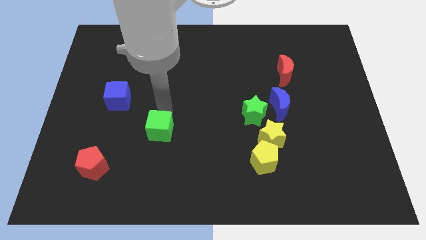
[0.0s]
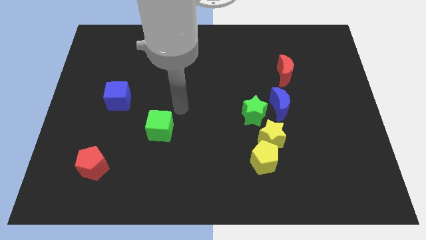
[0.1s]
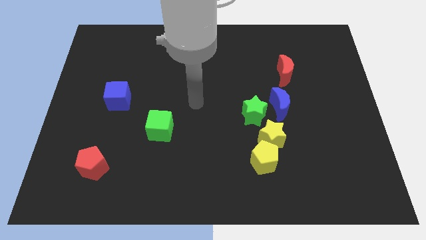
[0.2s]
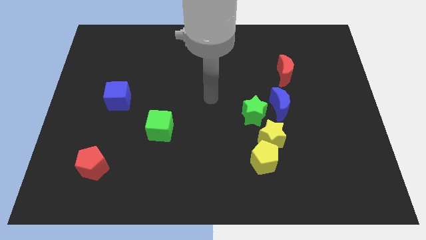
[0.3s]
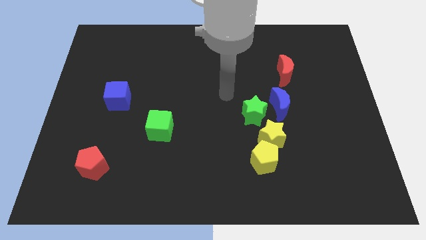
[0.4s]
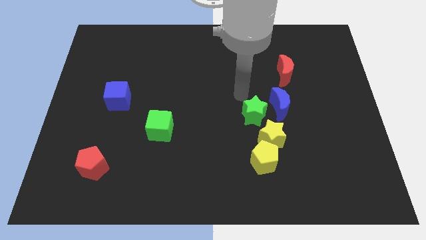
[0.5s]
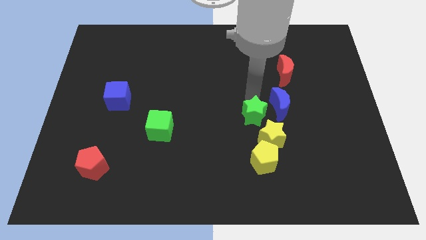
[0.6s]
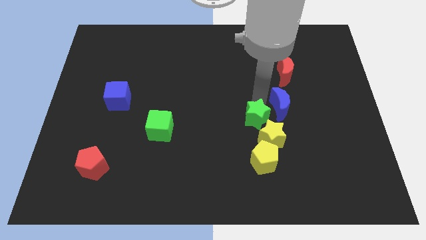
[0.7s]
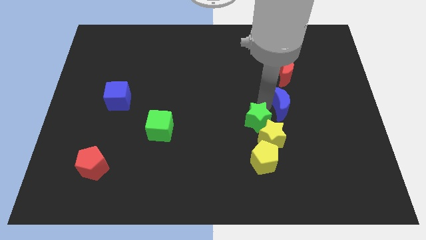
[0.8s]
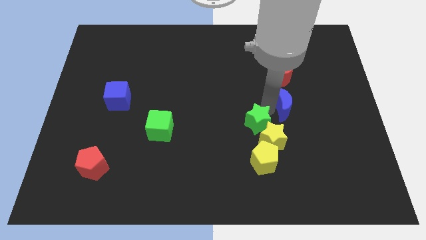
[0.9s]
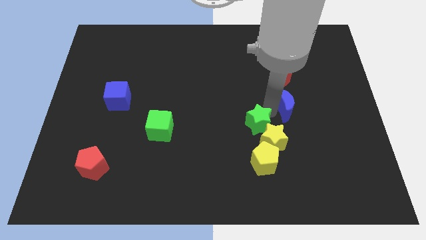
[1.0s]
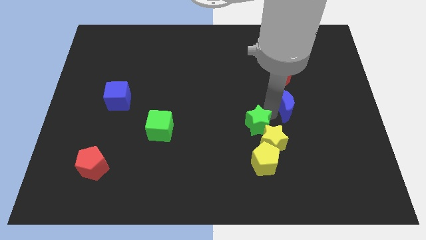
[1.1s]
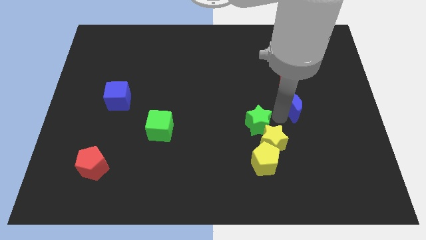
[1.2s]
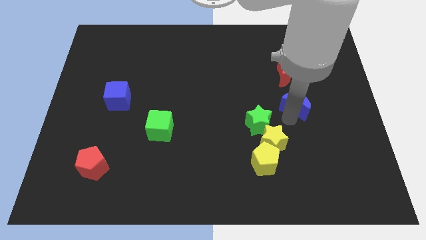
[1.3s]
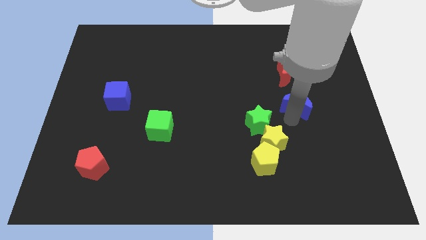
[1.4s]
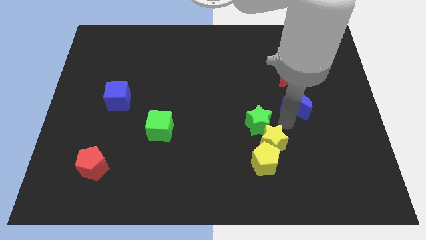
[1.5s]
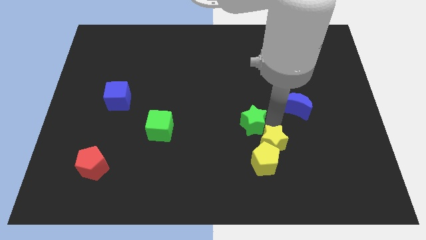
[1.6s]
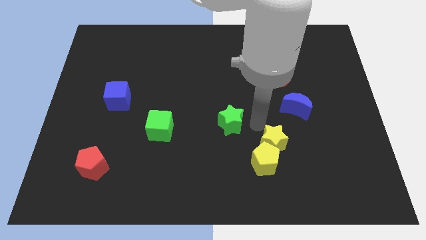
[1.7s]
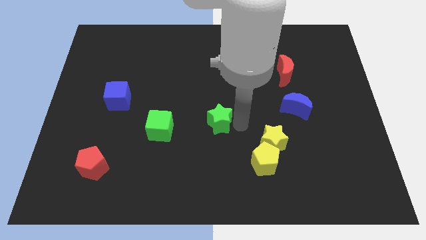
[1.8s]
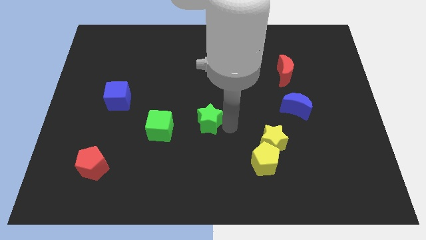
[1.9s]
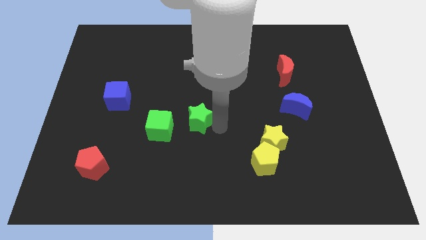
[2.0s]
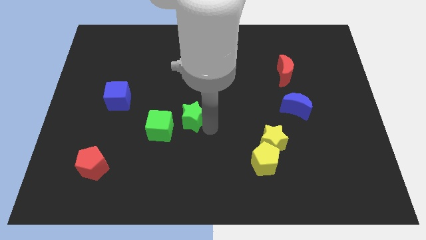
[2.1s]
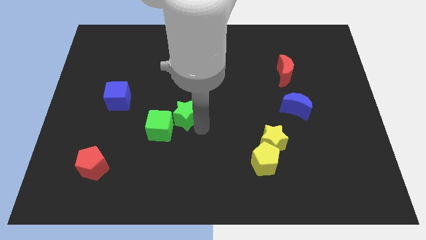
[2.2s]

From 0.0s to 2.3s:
move green star close to green cube

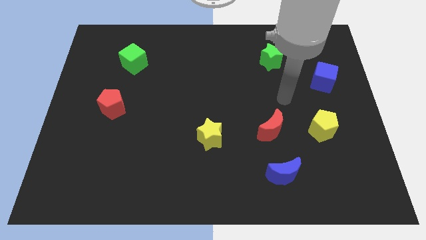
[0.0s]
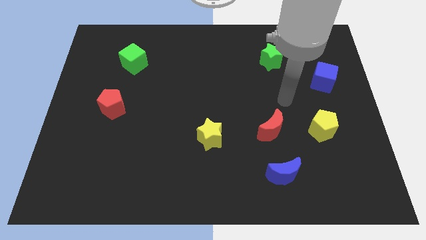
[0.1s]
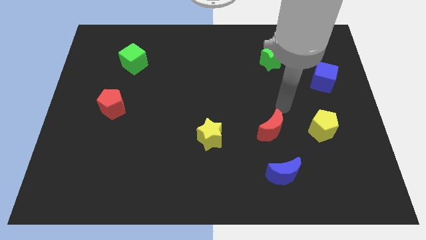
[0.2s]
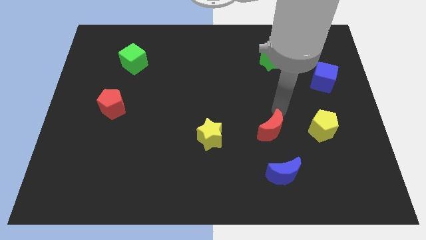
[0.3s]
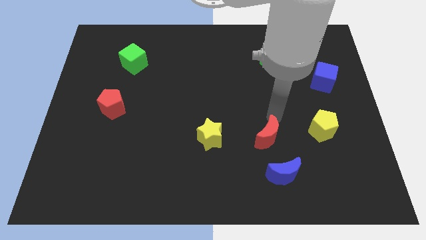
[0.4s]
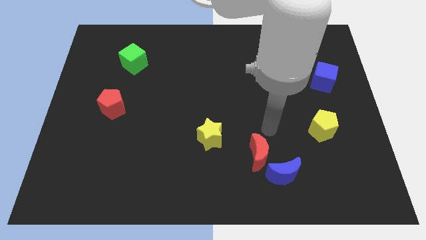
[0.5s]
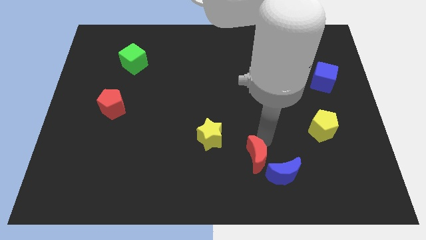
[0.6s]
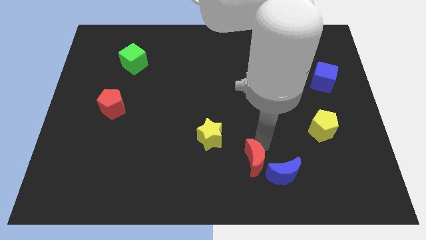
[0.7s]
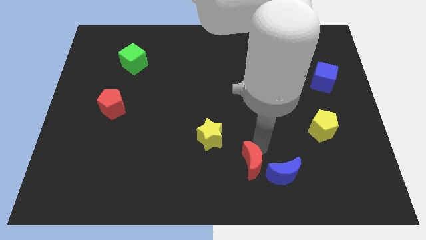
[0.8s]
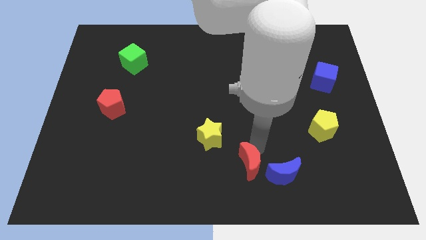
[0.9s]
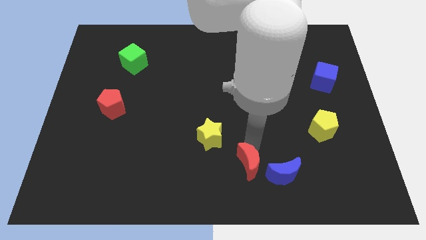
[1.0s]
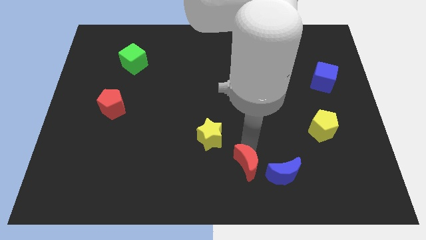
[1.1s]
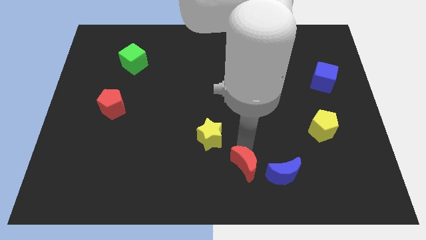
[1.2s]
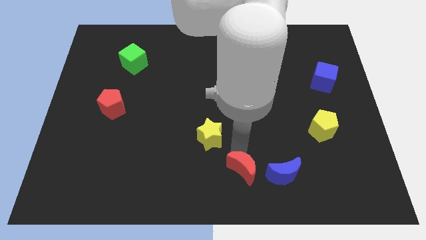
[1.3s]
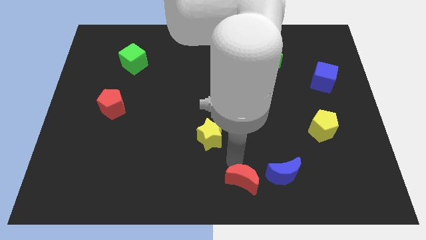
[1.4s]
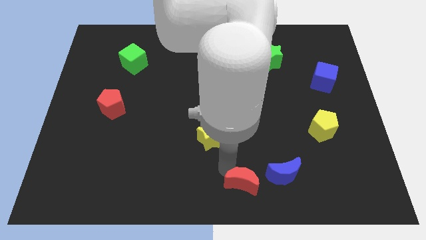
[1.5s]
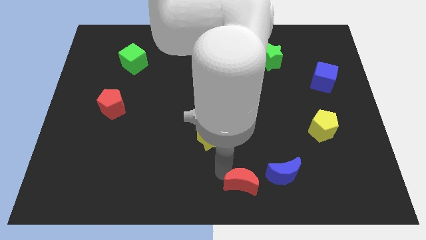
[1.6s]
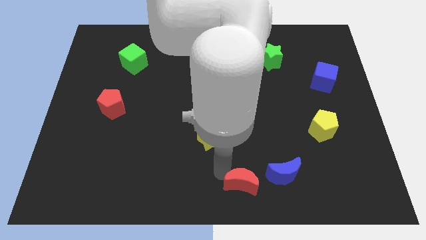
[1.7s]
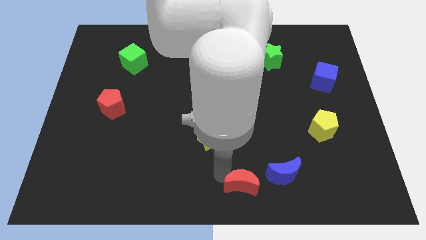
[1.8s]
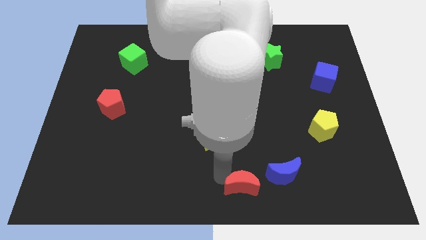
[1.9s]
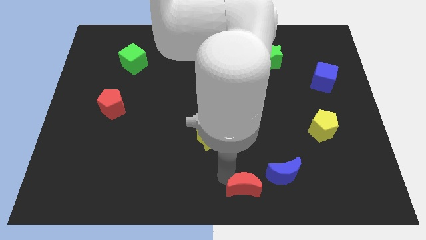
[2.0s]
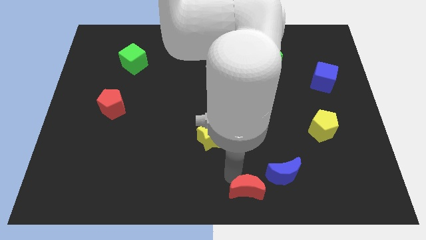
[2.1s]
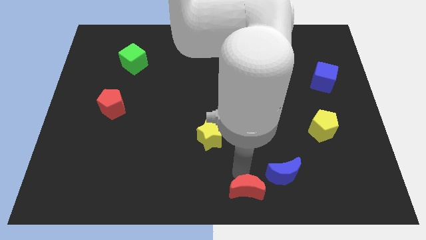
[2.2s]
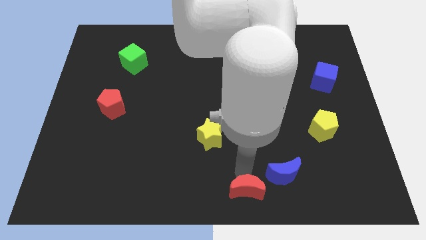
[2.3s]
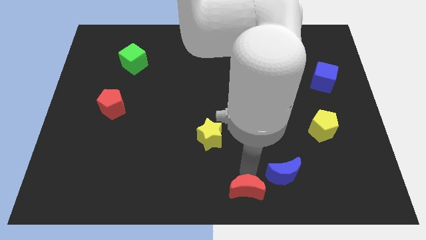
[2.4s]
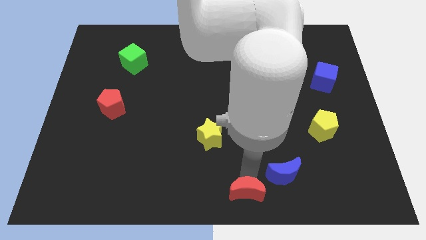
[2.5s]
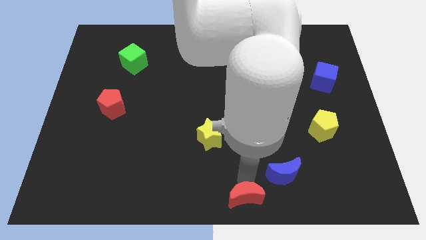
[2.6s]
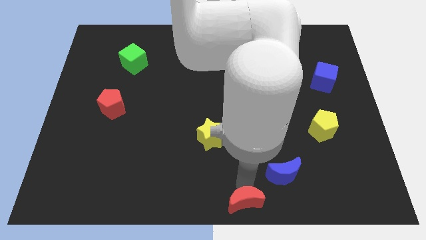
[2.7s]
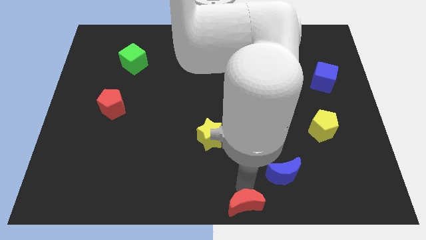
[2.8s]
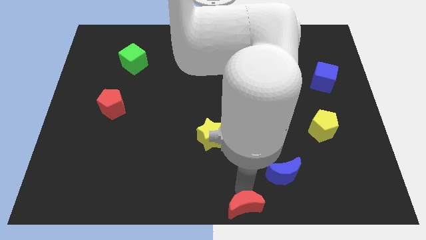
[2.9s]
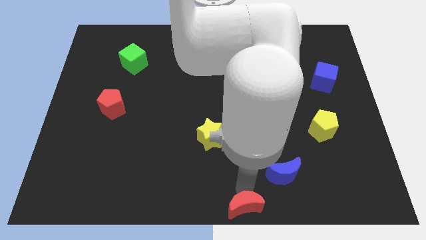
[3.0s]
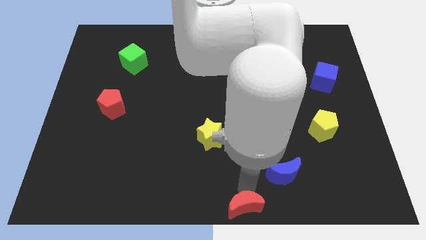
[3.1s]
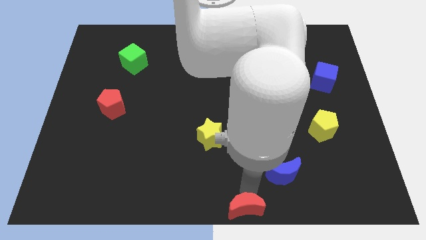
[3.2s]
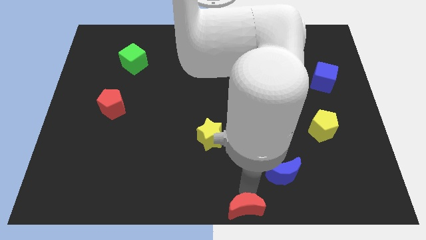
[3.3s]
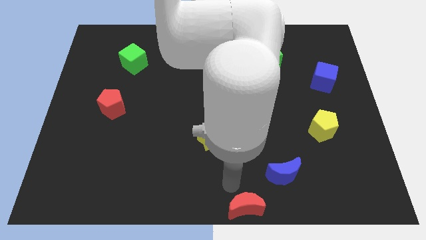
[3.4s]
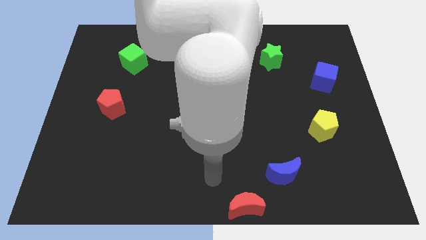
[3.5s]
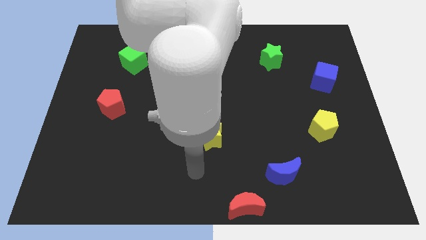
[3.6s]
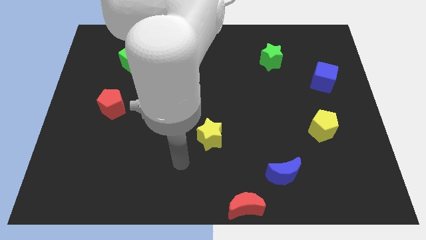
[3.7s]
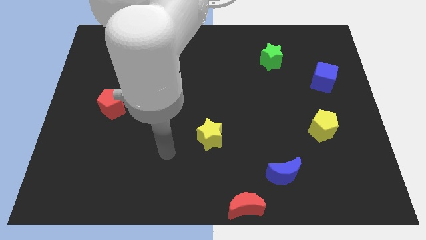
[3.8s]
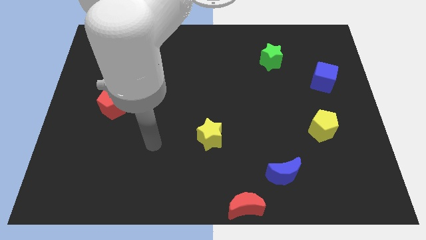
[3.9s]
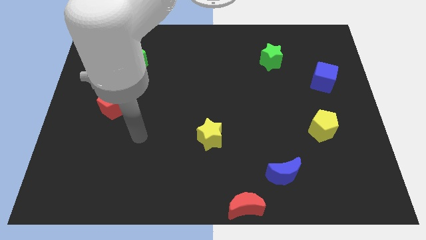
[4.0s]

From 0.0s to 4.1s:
place the red moon below the blue moon

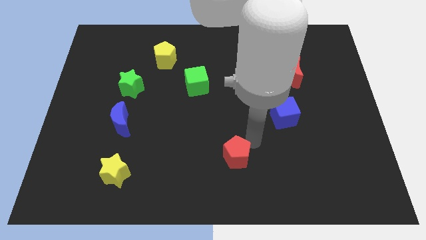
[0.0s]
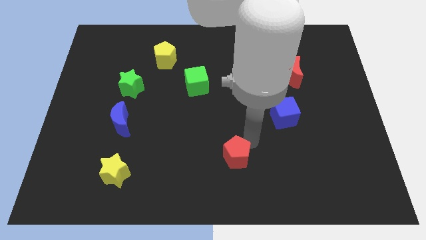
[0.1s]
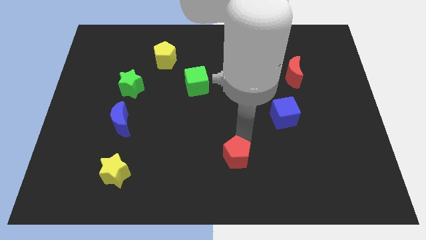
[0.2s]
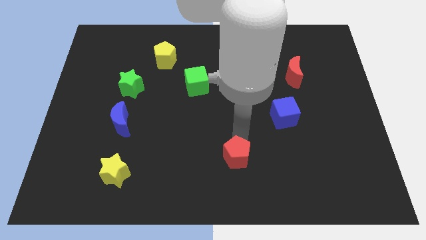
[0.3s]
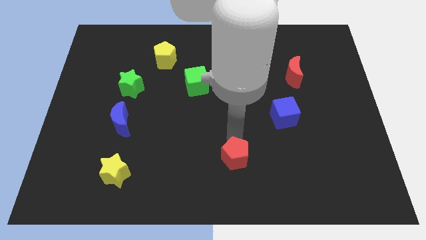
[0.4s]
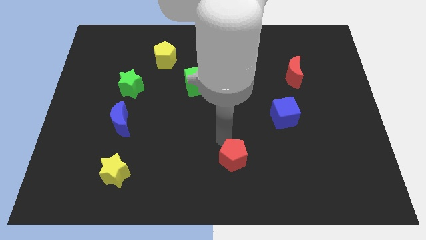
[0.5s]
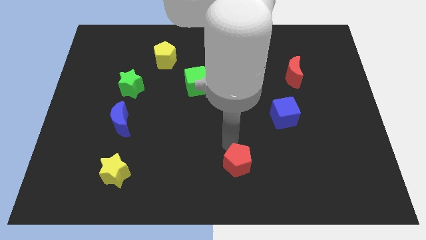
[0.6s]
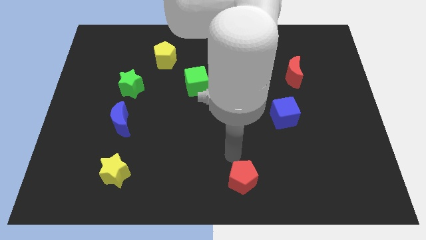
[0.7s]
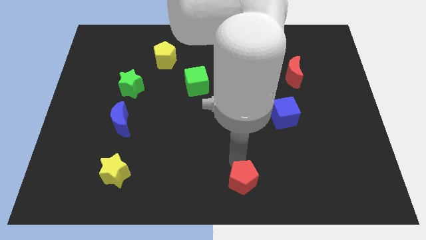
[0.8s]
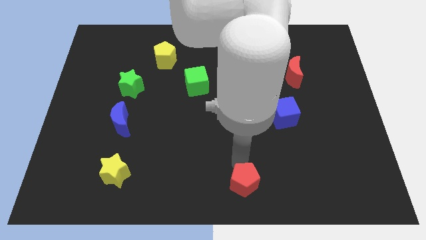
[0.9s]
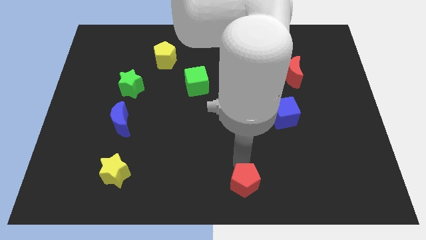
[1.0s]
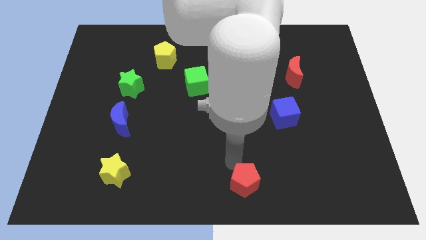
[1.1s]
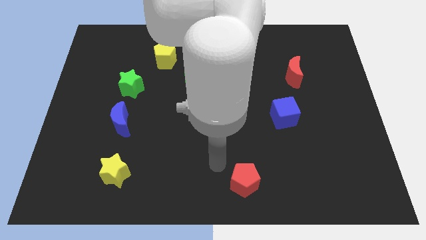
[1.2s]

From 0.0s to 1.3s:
push red pentagon towards bottom of the board

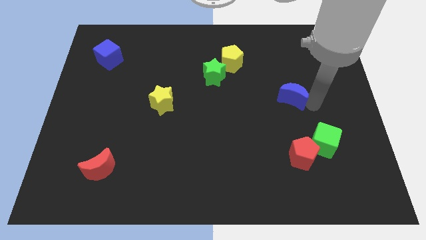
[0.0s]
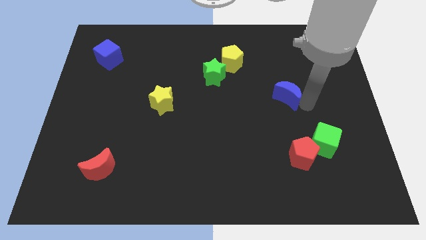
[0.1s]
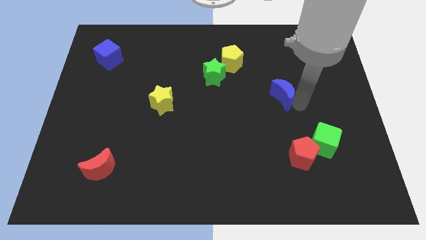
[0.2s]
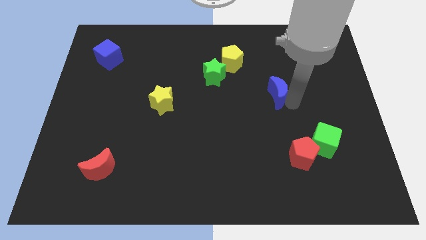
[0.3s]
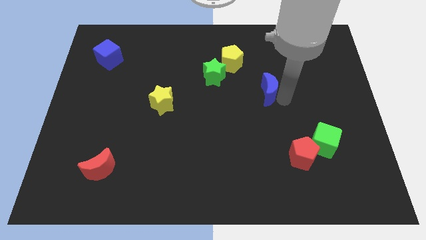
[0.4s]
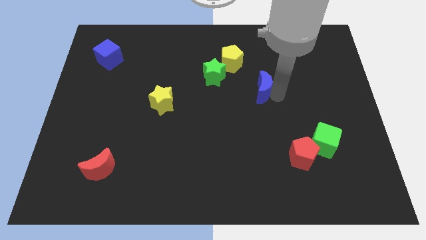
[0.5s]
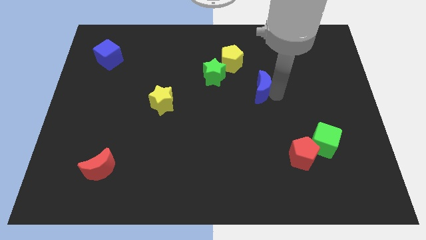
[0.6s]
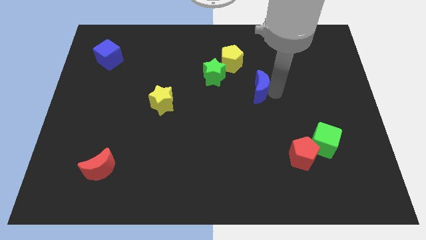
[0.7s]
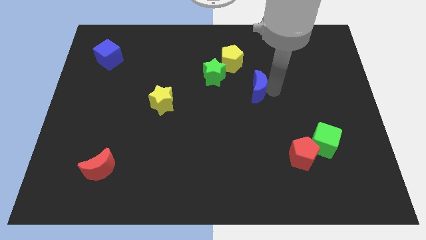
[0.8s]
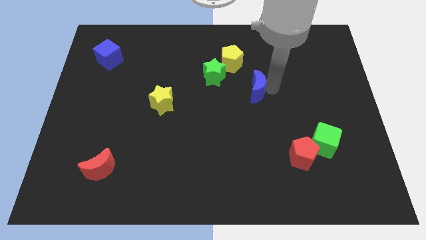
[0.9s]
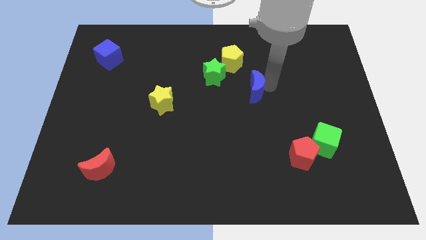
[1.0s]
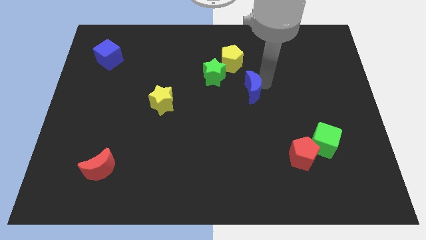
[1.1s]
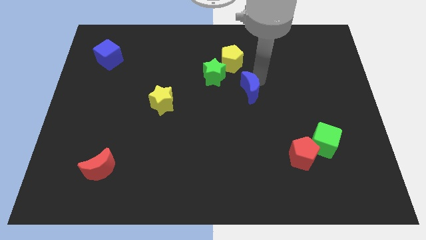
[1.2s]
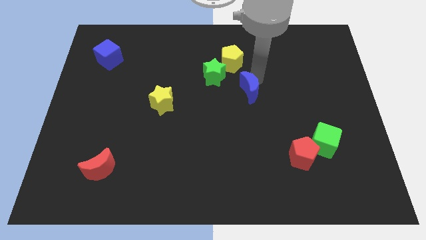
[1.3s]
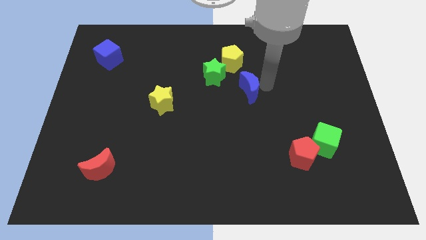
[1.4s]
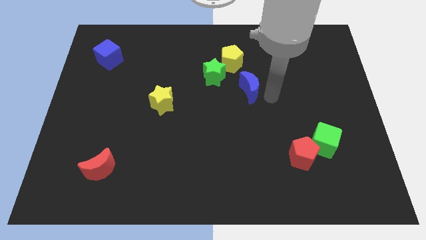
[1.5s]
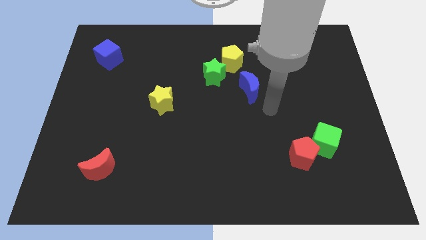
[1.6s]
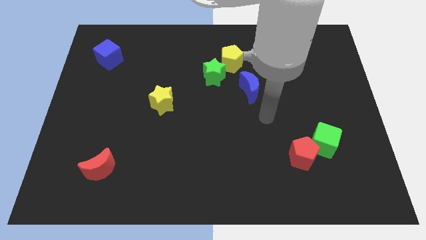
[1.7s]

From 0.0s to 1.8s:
place the blue moon diagonal to the yellow pentagon
